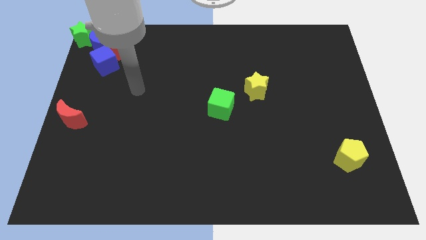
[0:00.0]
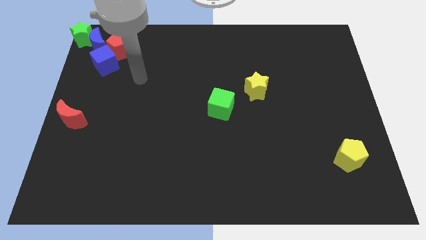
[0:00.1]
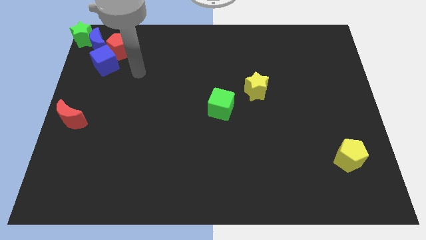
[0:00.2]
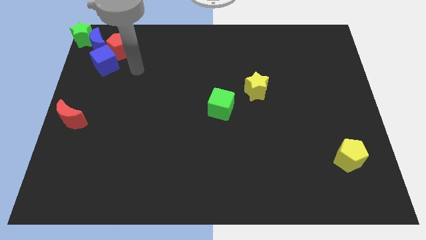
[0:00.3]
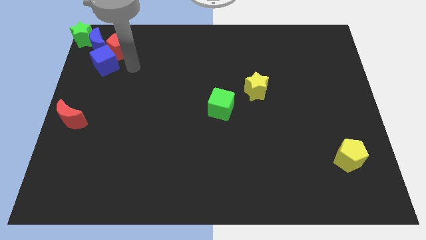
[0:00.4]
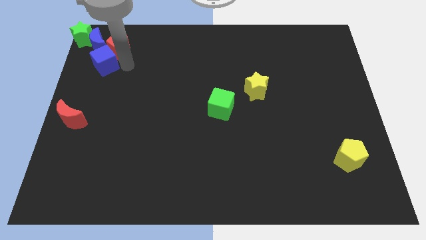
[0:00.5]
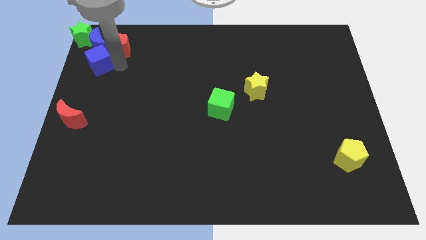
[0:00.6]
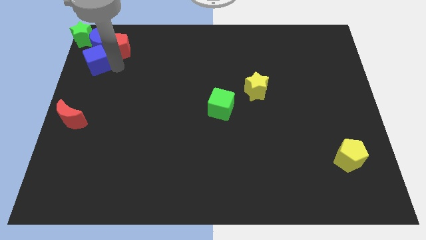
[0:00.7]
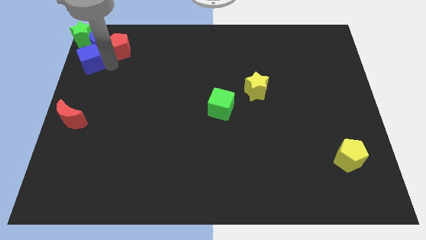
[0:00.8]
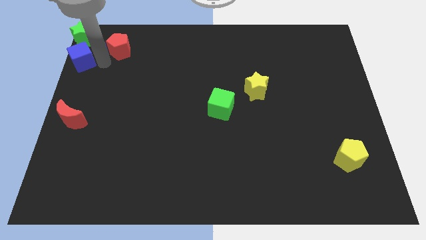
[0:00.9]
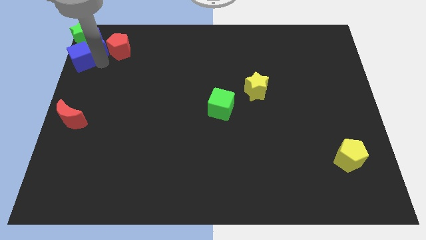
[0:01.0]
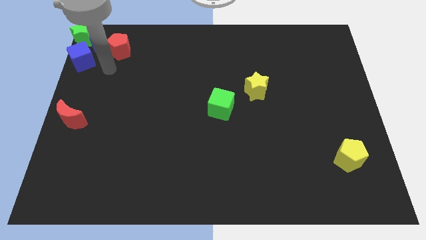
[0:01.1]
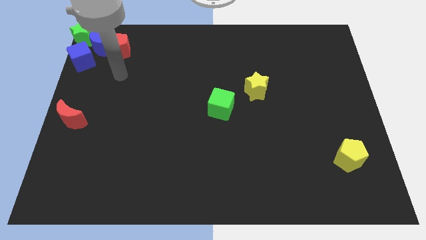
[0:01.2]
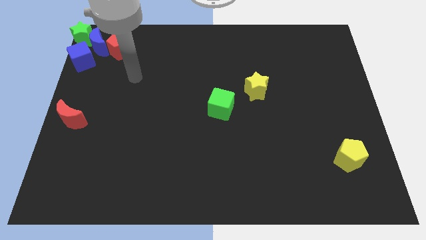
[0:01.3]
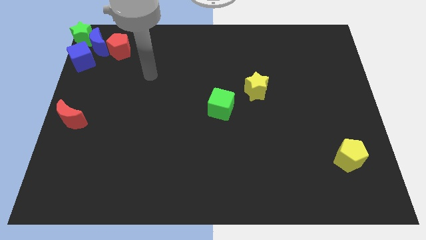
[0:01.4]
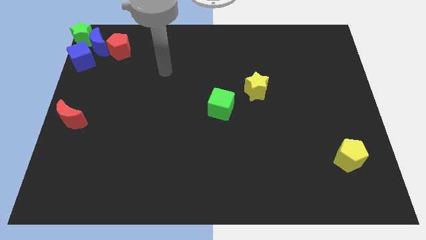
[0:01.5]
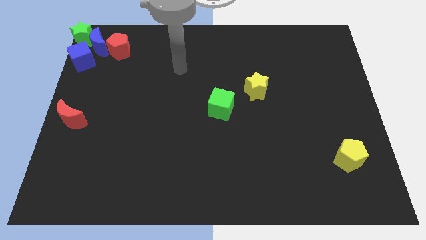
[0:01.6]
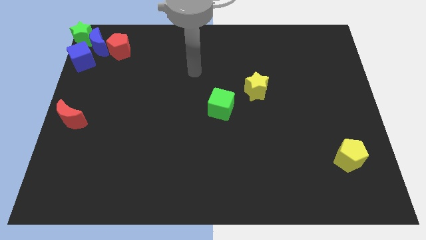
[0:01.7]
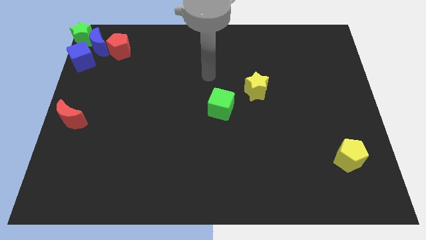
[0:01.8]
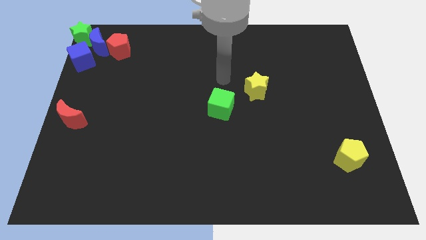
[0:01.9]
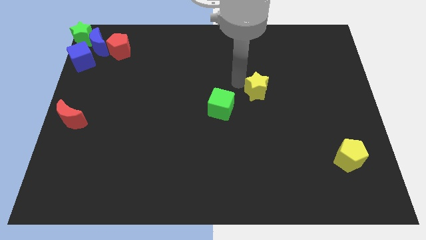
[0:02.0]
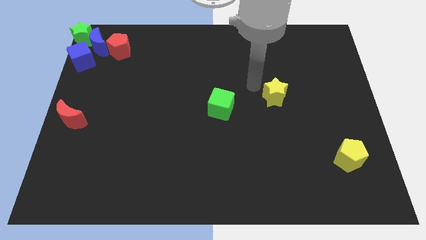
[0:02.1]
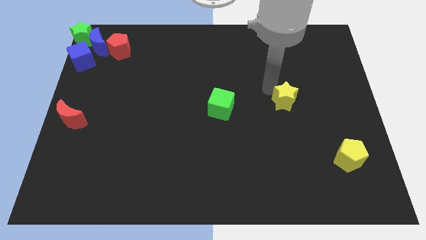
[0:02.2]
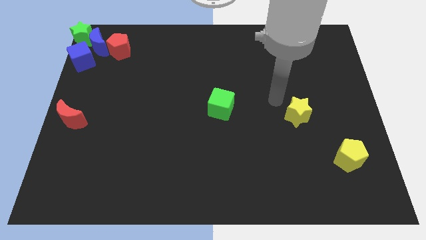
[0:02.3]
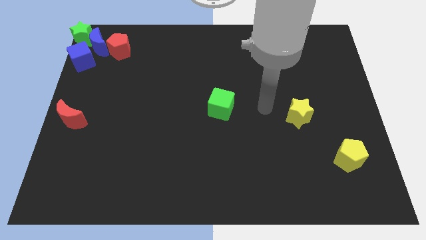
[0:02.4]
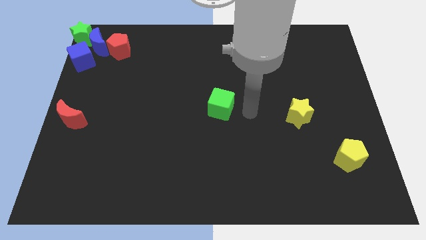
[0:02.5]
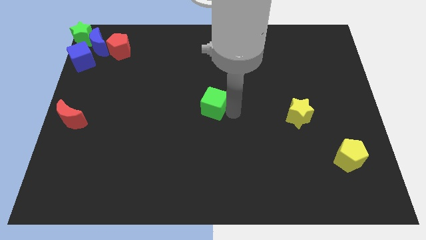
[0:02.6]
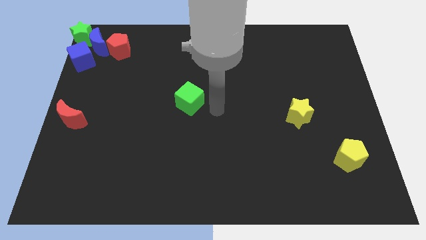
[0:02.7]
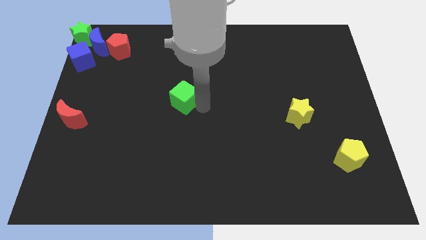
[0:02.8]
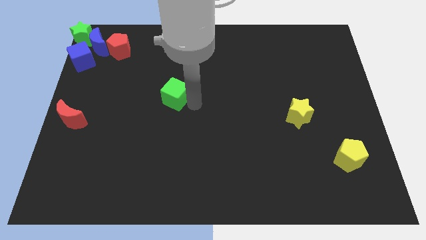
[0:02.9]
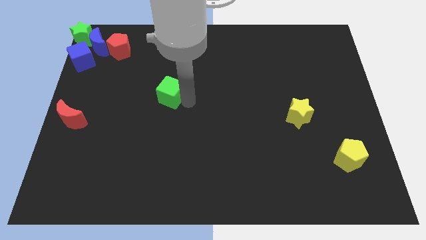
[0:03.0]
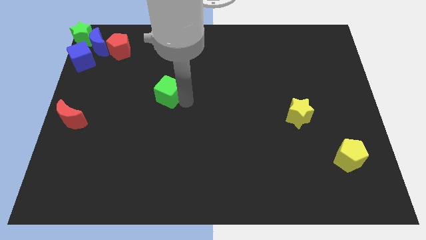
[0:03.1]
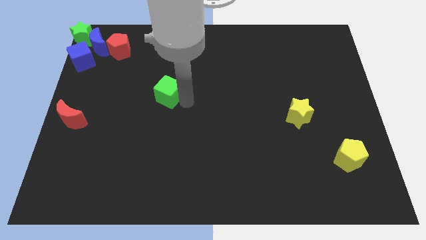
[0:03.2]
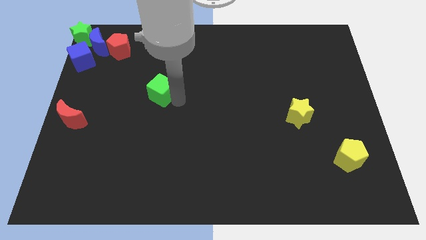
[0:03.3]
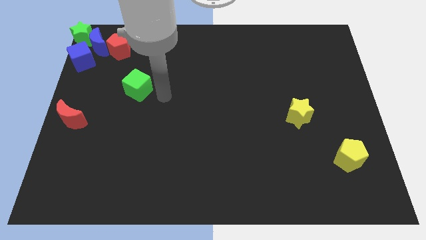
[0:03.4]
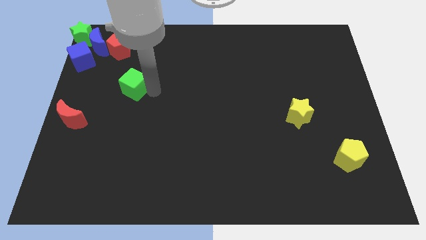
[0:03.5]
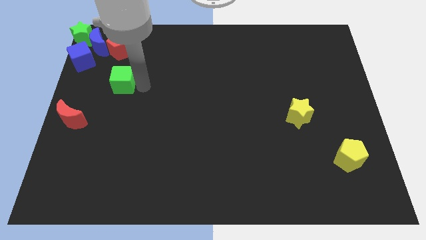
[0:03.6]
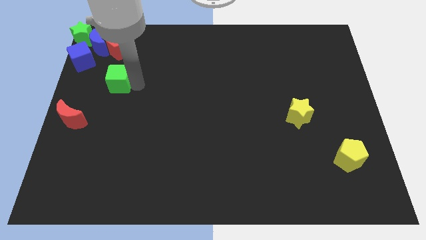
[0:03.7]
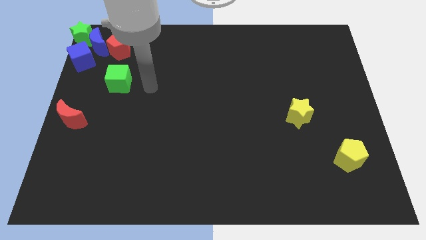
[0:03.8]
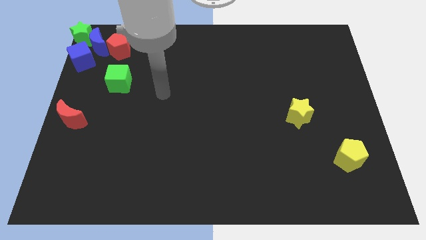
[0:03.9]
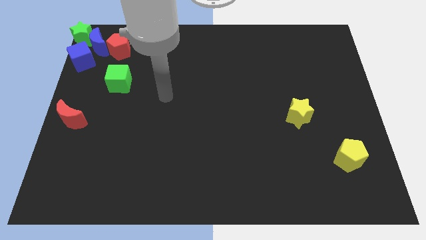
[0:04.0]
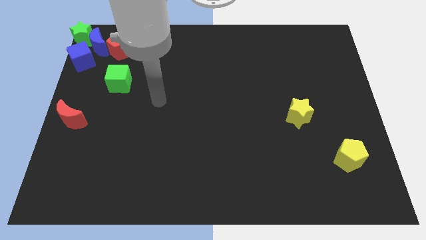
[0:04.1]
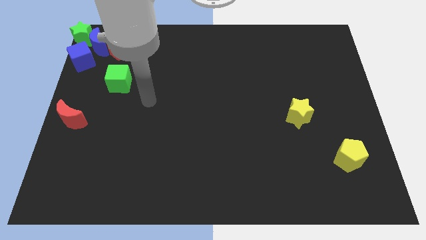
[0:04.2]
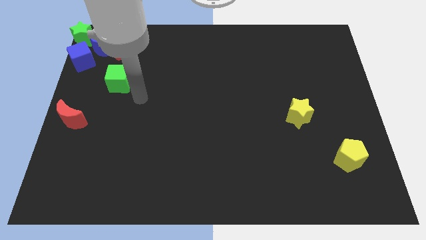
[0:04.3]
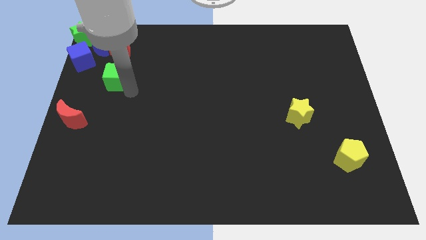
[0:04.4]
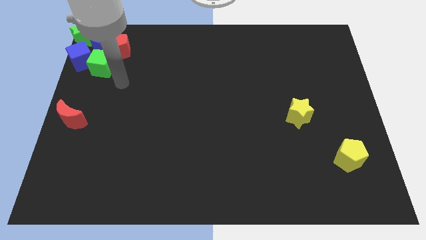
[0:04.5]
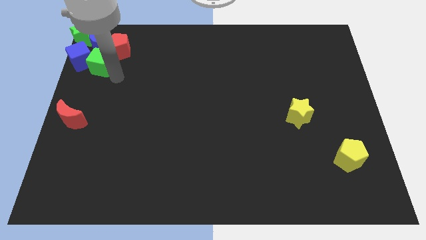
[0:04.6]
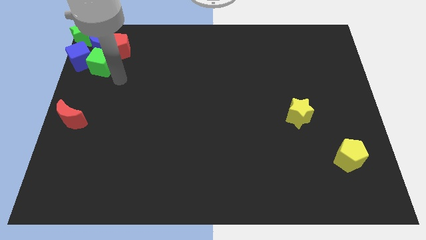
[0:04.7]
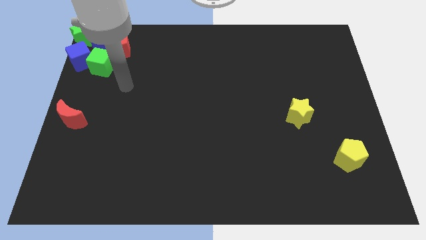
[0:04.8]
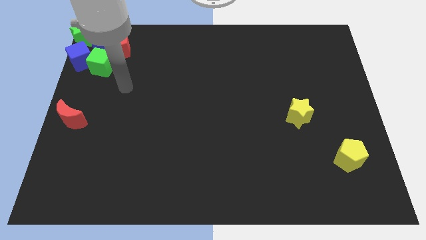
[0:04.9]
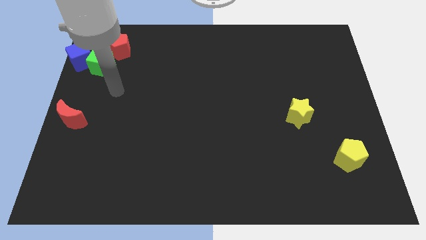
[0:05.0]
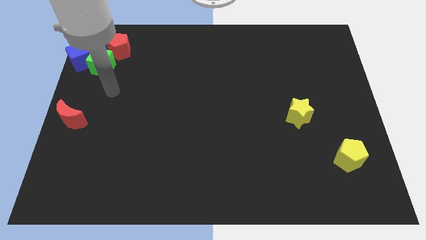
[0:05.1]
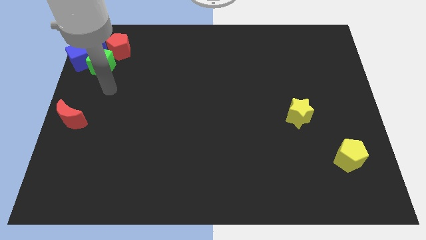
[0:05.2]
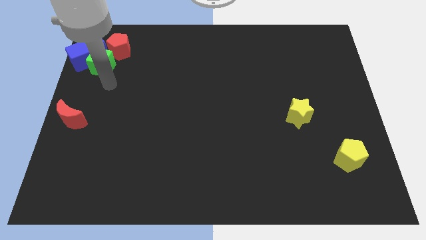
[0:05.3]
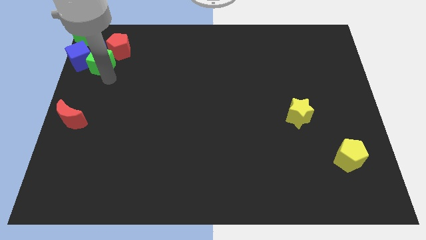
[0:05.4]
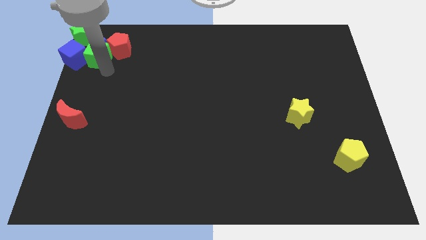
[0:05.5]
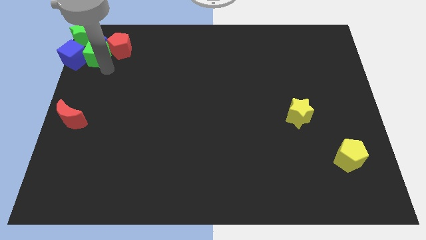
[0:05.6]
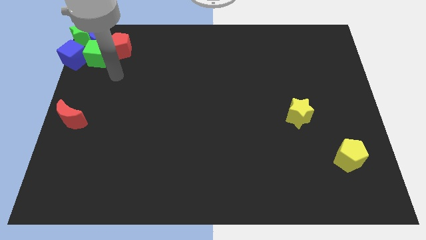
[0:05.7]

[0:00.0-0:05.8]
push the green cube in between the red pentagon and blue cube

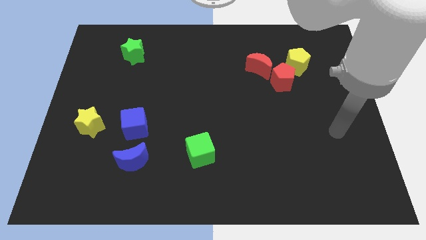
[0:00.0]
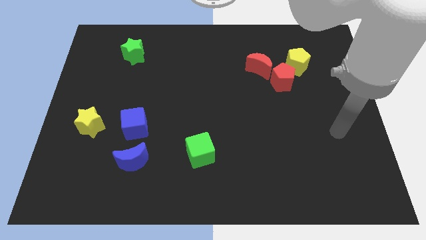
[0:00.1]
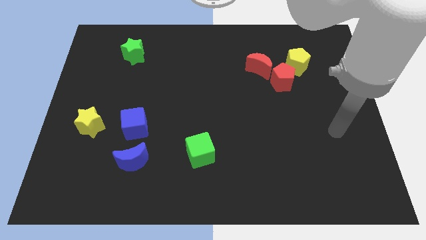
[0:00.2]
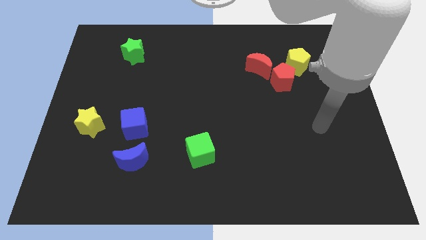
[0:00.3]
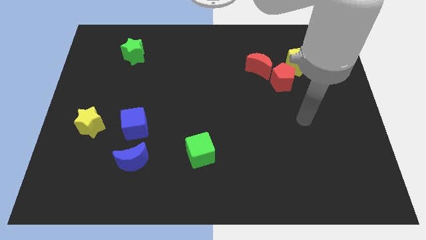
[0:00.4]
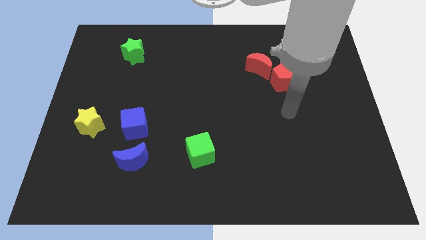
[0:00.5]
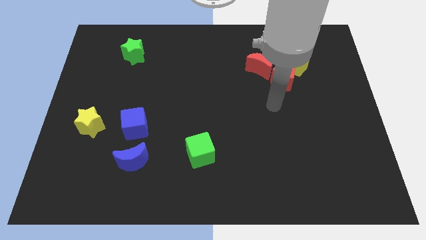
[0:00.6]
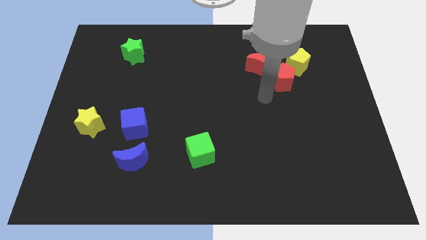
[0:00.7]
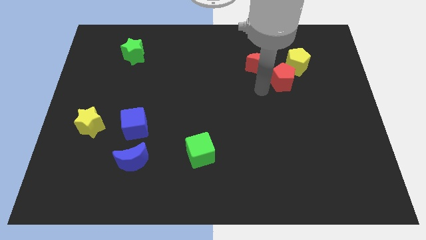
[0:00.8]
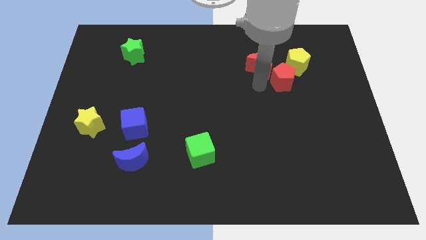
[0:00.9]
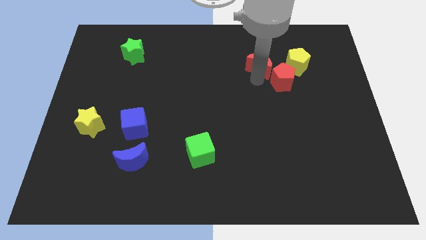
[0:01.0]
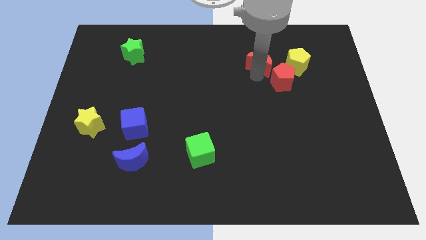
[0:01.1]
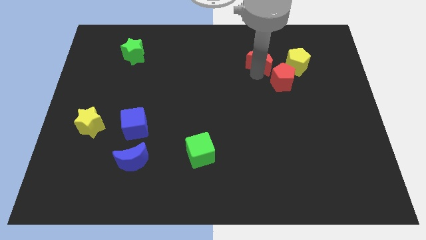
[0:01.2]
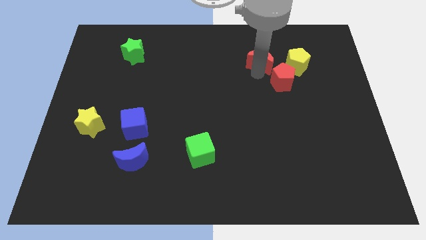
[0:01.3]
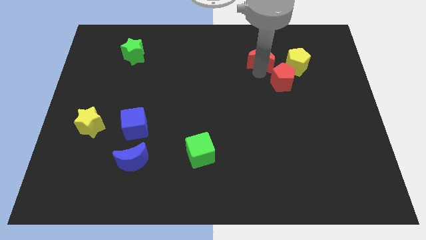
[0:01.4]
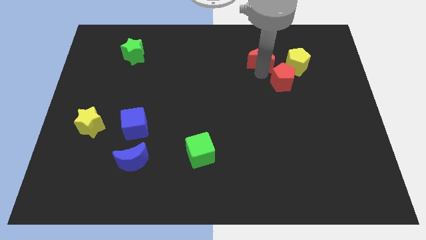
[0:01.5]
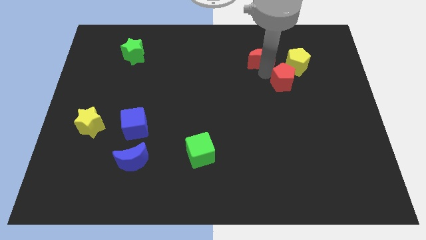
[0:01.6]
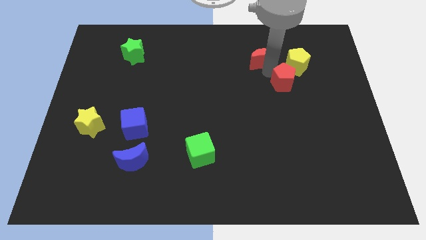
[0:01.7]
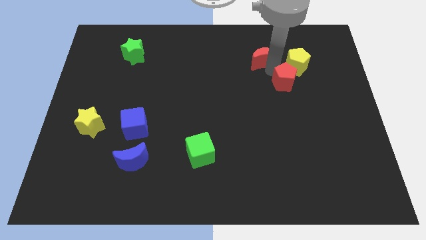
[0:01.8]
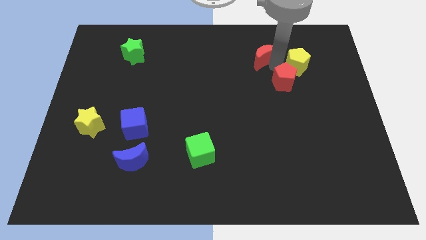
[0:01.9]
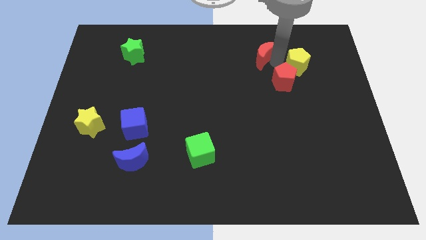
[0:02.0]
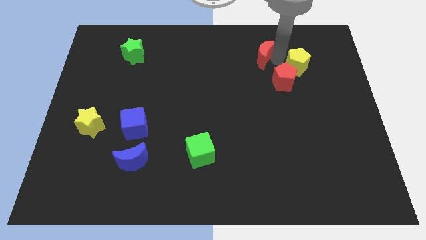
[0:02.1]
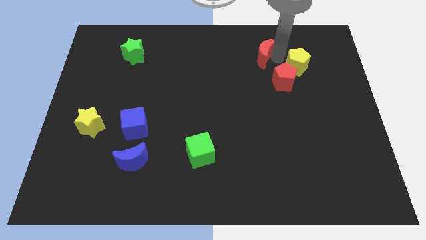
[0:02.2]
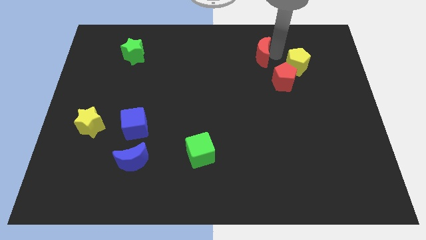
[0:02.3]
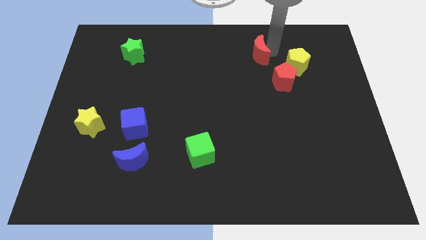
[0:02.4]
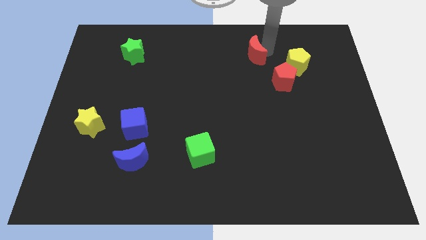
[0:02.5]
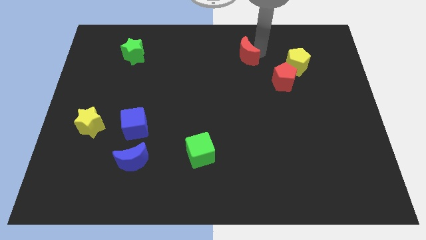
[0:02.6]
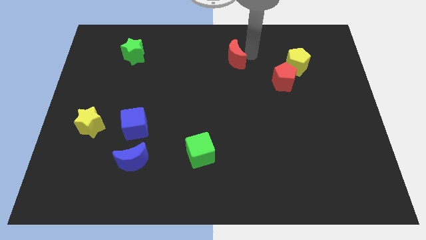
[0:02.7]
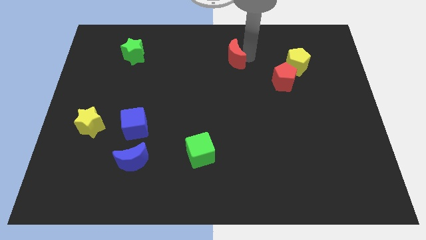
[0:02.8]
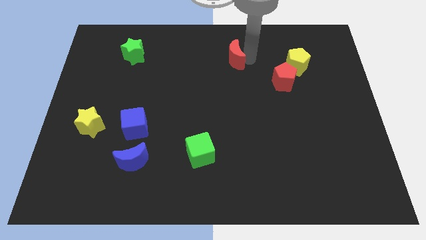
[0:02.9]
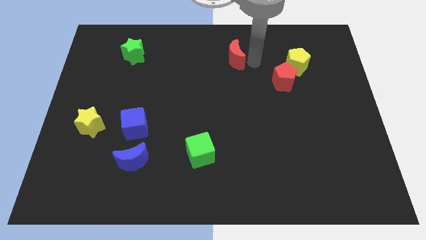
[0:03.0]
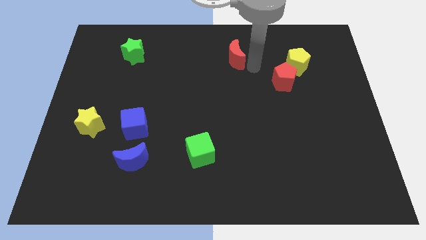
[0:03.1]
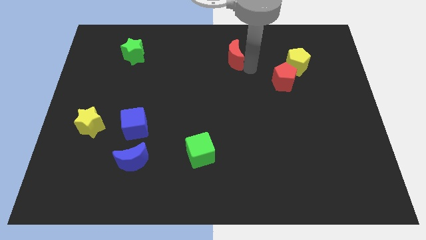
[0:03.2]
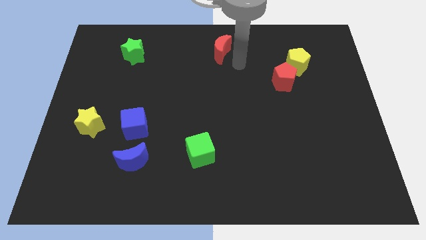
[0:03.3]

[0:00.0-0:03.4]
move the red moon to the top center side
